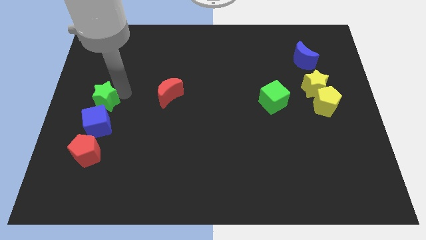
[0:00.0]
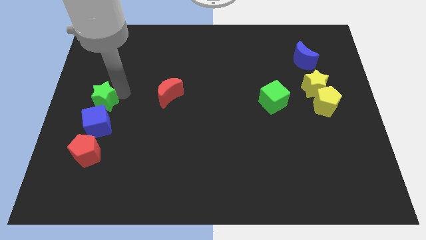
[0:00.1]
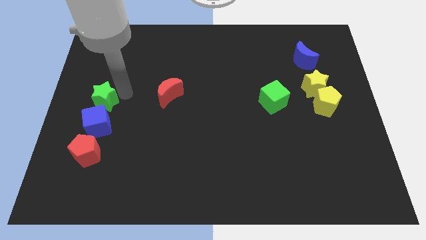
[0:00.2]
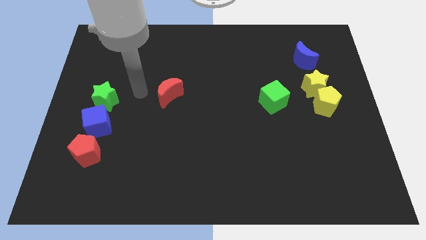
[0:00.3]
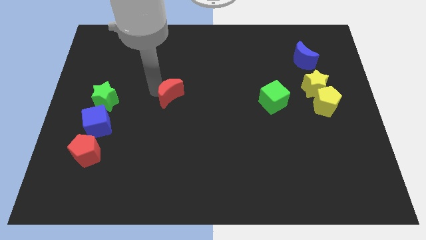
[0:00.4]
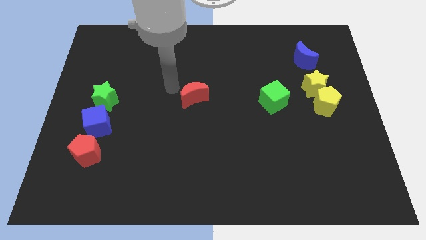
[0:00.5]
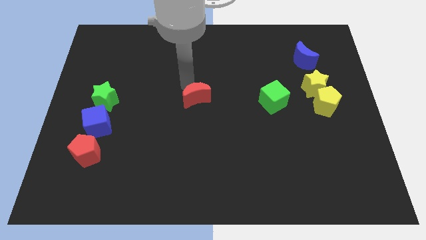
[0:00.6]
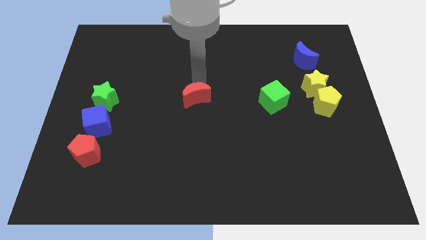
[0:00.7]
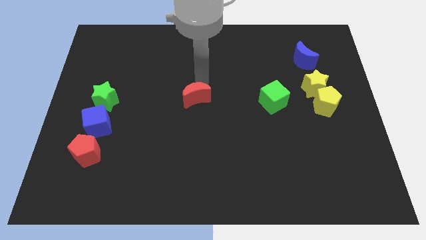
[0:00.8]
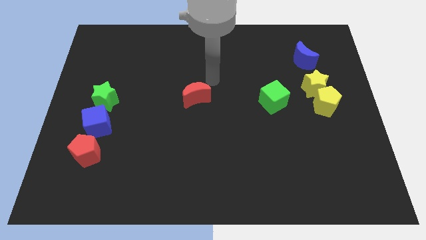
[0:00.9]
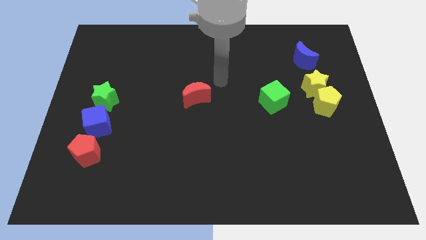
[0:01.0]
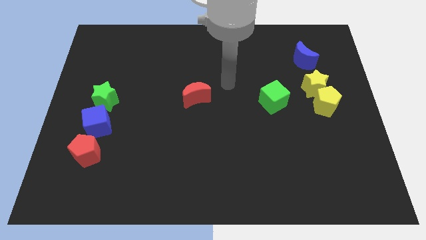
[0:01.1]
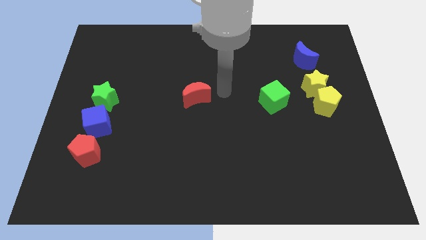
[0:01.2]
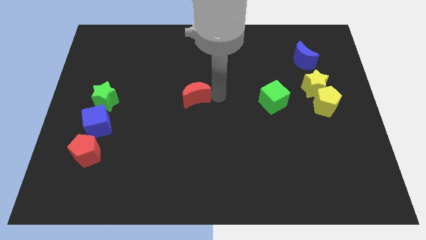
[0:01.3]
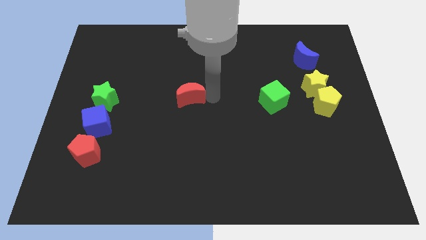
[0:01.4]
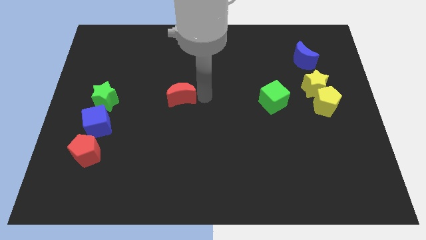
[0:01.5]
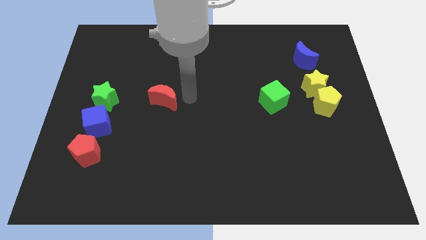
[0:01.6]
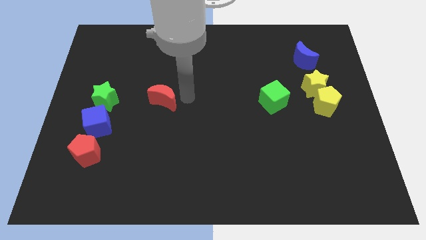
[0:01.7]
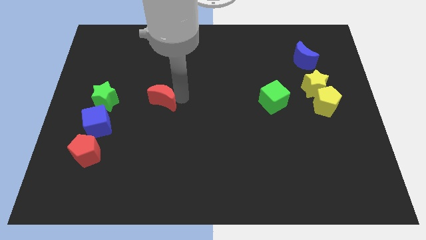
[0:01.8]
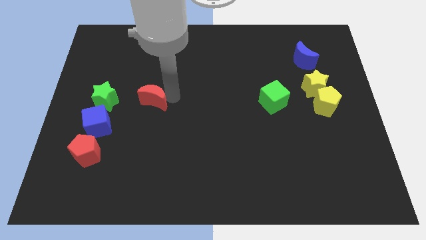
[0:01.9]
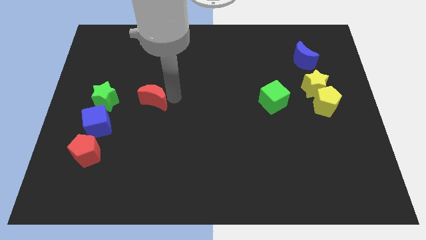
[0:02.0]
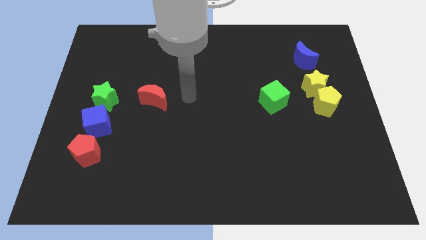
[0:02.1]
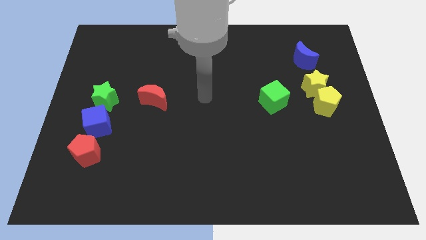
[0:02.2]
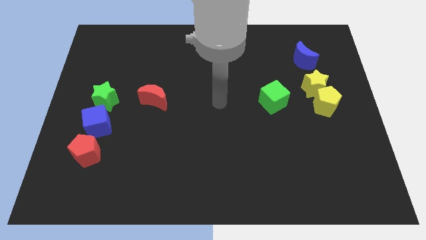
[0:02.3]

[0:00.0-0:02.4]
move red pentagon to the right of green star

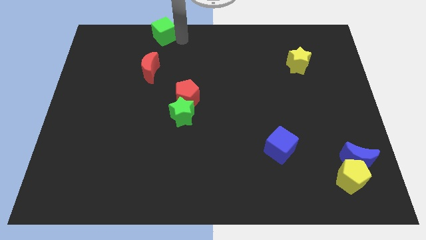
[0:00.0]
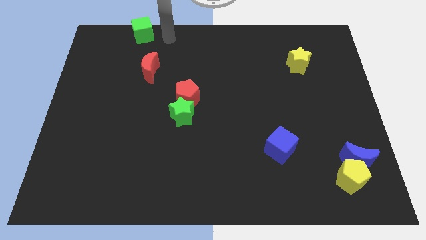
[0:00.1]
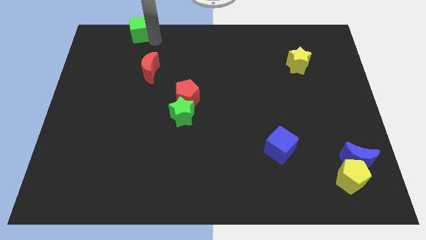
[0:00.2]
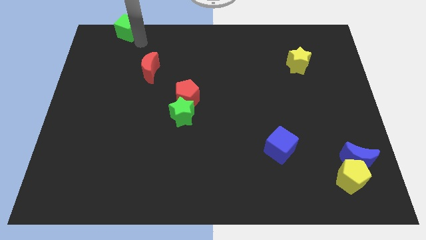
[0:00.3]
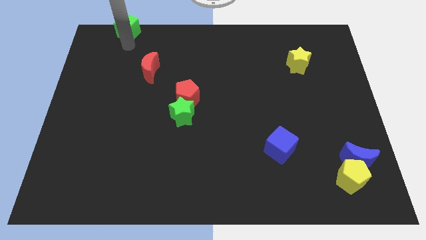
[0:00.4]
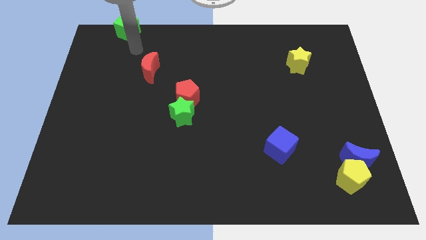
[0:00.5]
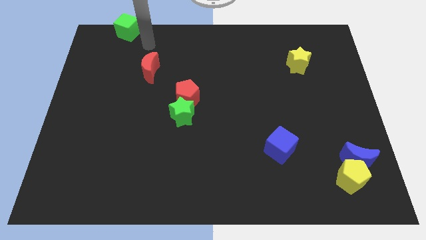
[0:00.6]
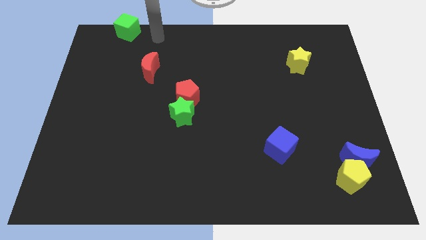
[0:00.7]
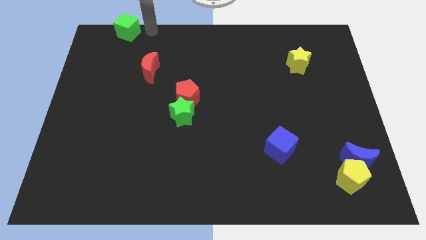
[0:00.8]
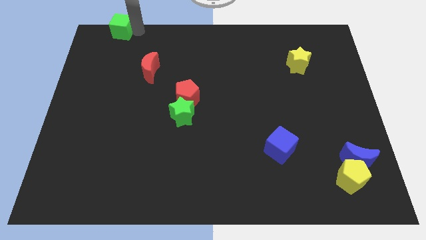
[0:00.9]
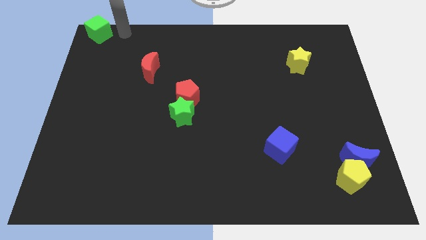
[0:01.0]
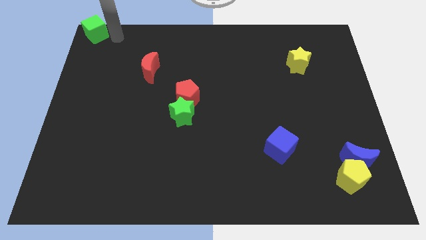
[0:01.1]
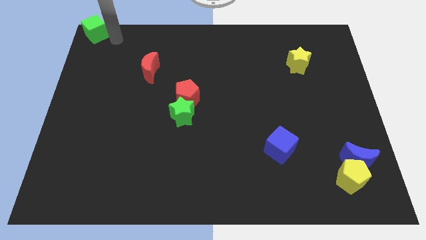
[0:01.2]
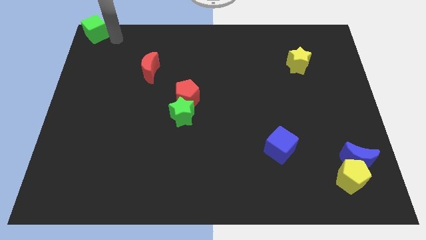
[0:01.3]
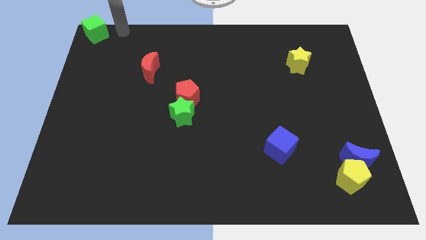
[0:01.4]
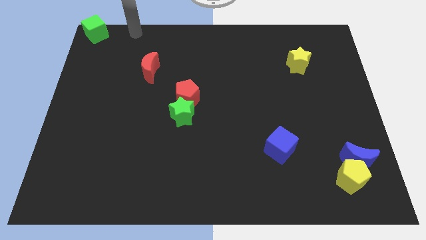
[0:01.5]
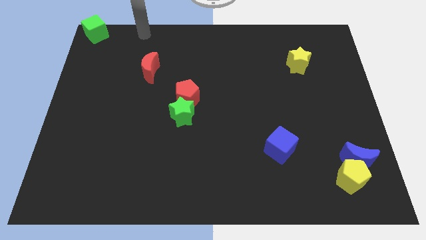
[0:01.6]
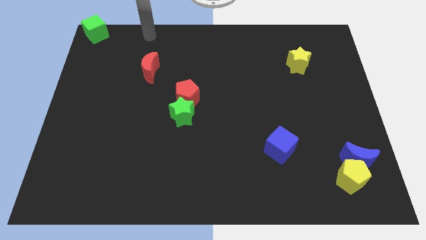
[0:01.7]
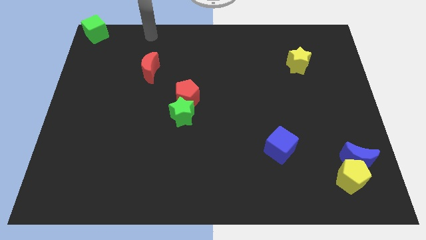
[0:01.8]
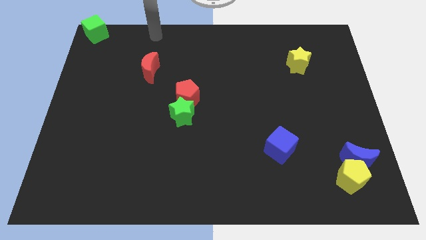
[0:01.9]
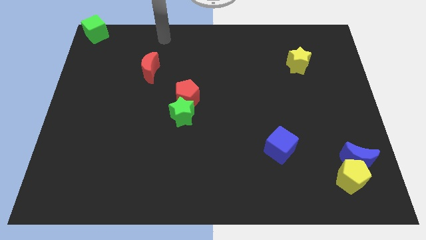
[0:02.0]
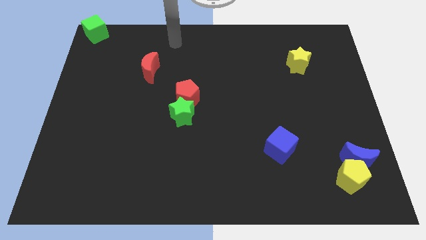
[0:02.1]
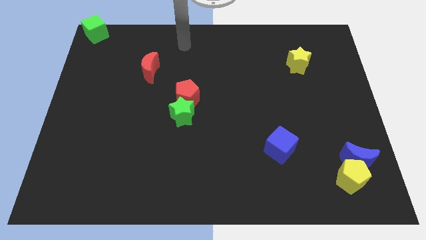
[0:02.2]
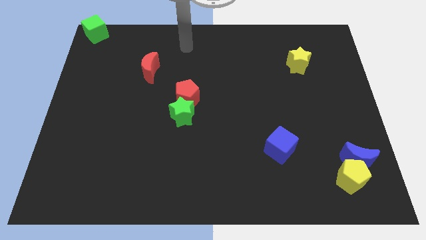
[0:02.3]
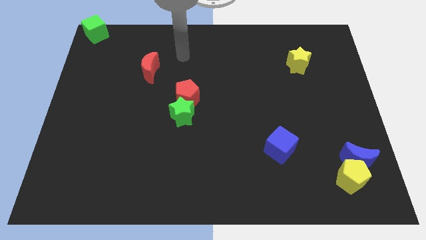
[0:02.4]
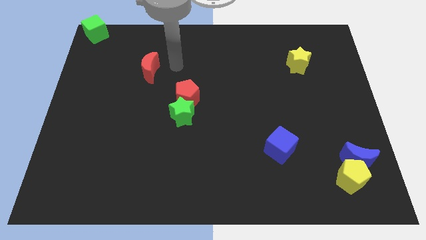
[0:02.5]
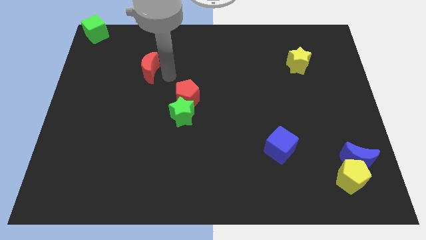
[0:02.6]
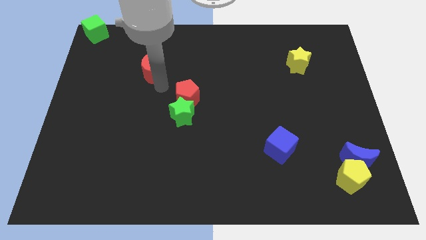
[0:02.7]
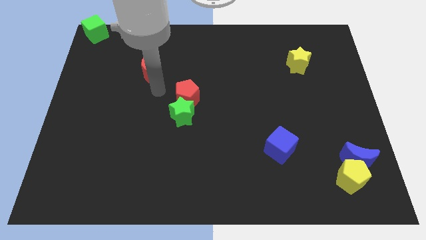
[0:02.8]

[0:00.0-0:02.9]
push the green cube to the top left corner of the board

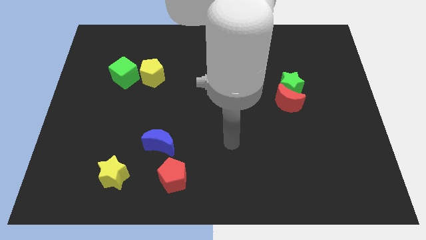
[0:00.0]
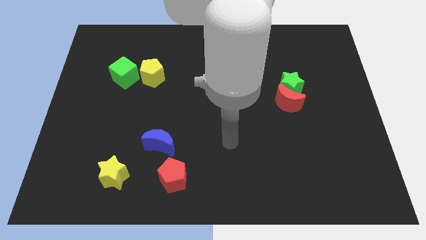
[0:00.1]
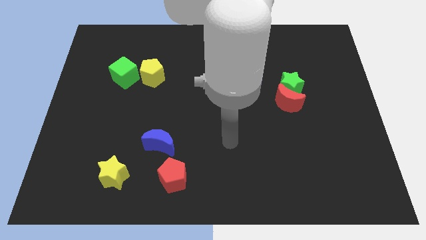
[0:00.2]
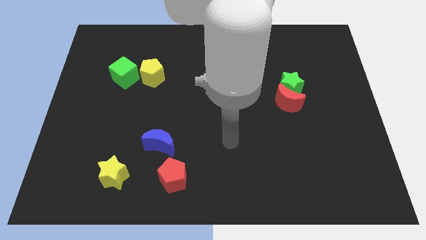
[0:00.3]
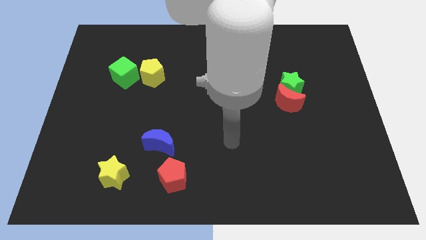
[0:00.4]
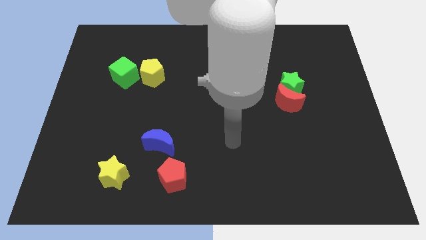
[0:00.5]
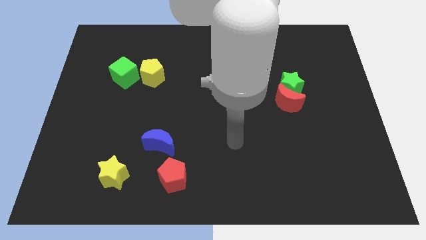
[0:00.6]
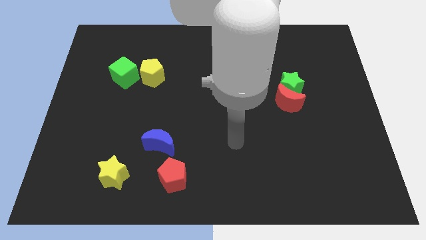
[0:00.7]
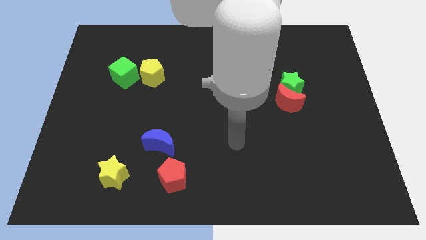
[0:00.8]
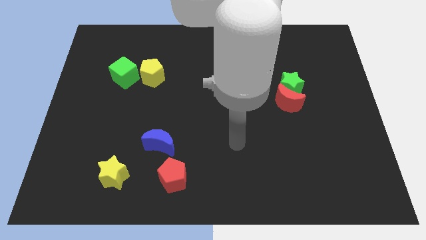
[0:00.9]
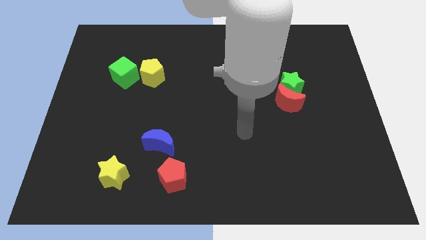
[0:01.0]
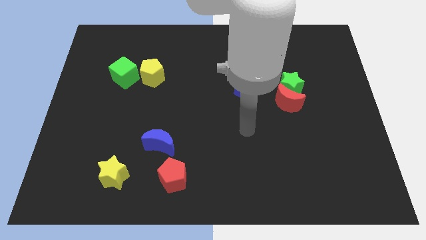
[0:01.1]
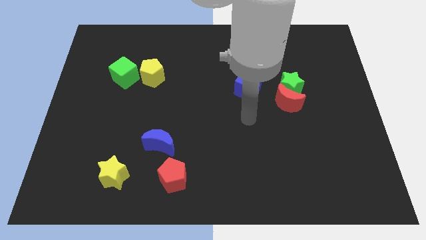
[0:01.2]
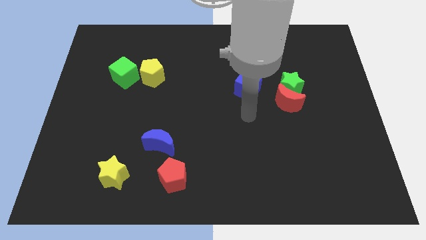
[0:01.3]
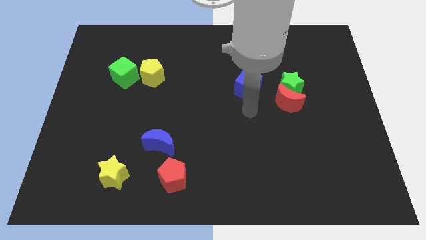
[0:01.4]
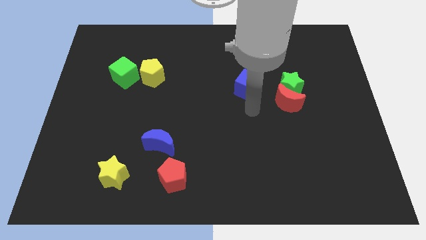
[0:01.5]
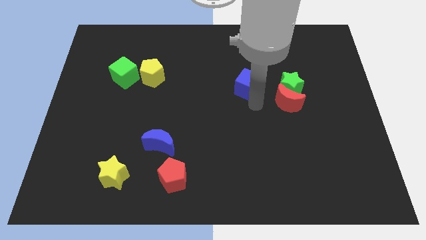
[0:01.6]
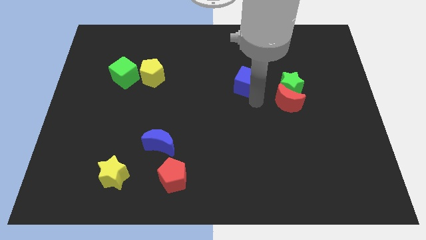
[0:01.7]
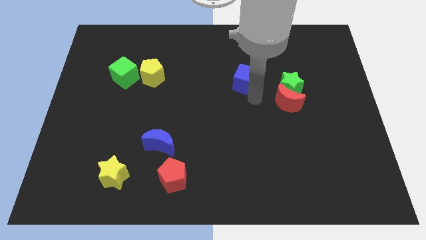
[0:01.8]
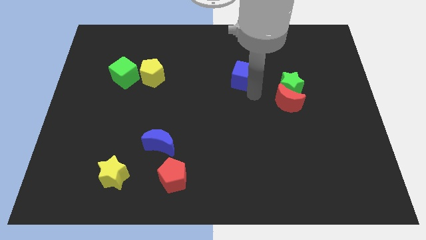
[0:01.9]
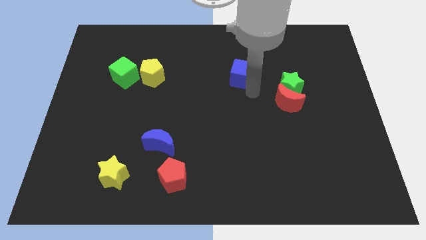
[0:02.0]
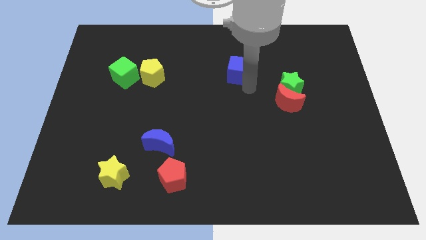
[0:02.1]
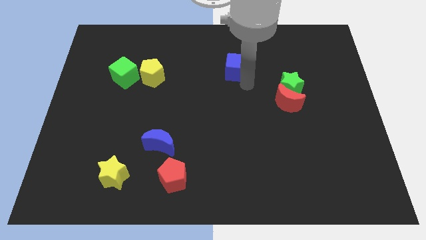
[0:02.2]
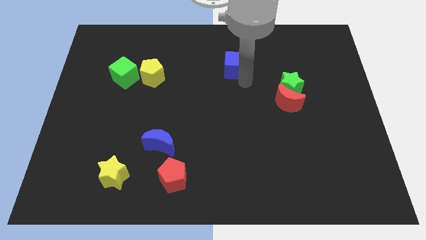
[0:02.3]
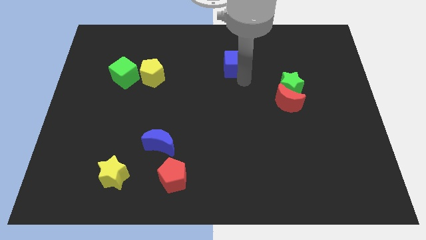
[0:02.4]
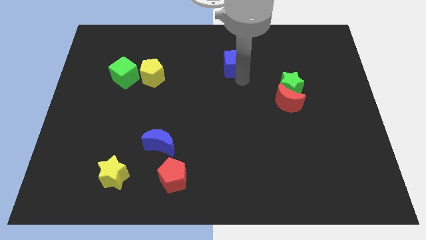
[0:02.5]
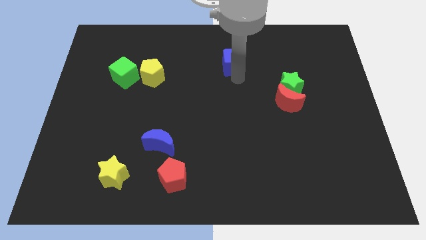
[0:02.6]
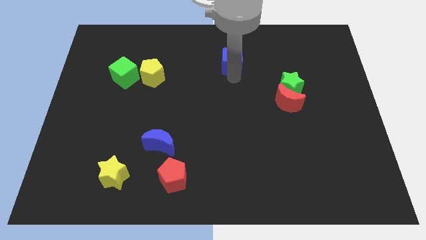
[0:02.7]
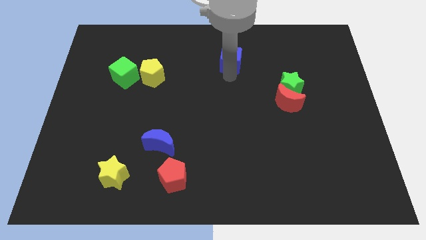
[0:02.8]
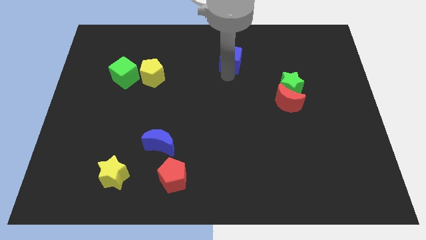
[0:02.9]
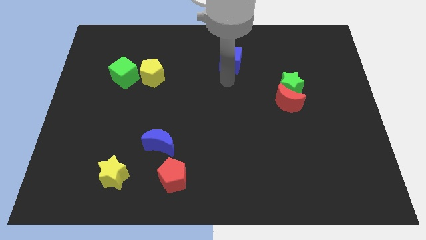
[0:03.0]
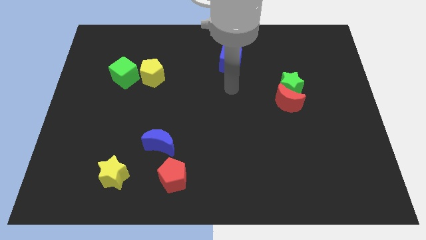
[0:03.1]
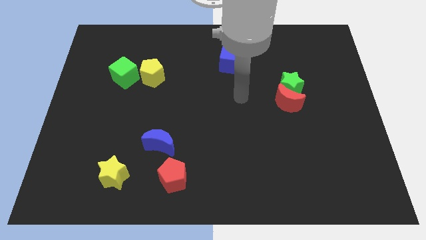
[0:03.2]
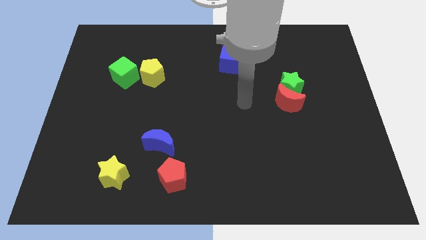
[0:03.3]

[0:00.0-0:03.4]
push the blue cube towards the top center

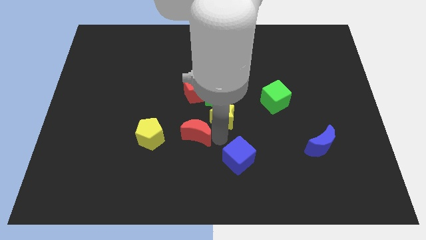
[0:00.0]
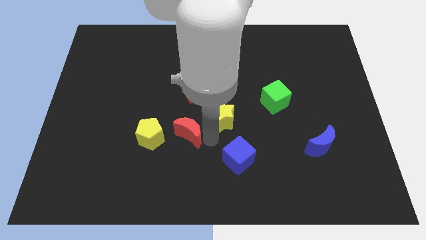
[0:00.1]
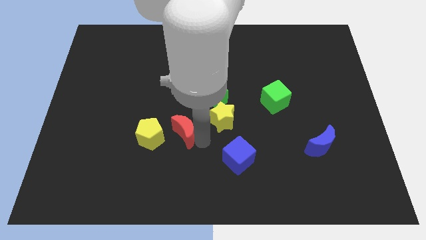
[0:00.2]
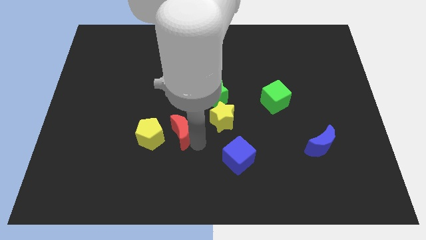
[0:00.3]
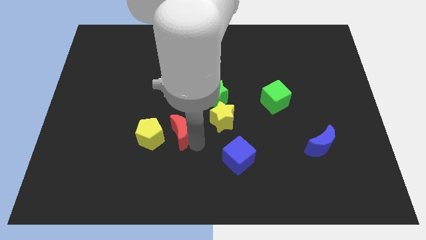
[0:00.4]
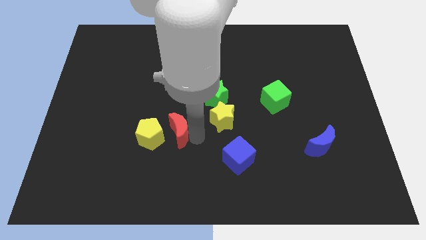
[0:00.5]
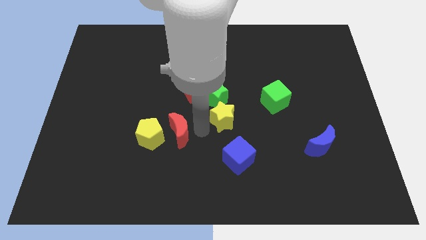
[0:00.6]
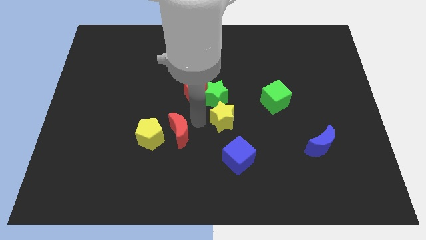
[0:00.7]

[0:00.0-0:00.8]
separate red moon from yellow star
